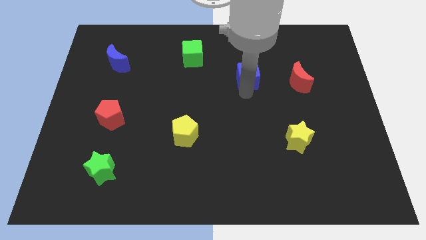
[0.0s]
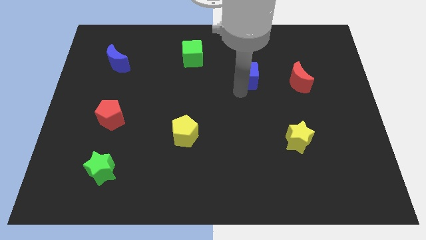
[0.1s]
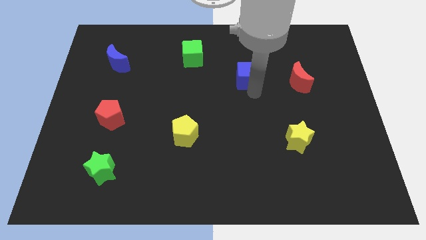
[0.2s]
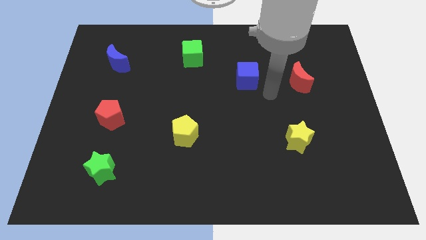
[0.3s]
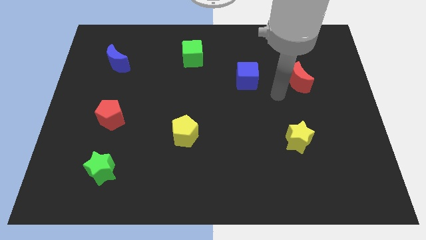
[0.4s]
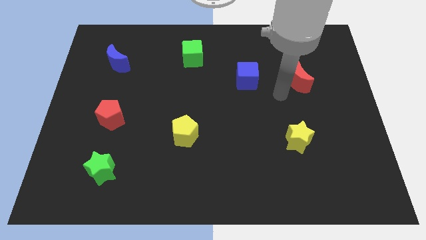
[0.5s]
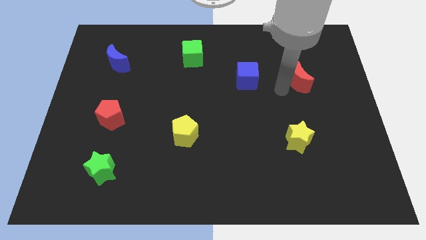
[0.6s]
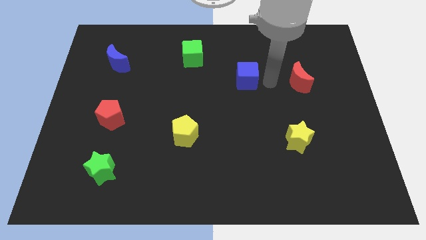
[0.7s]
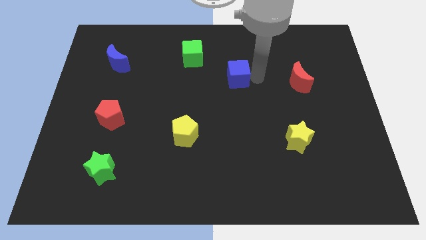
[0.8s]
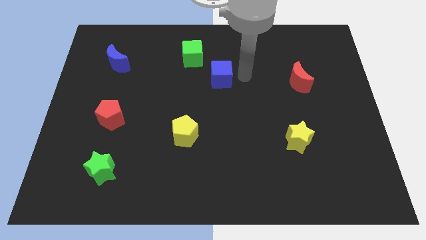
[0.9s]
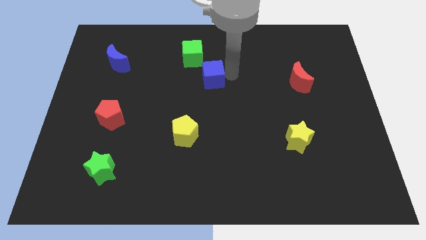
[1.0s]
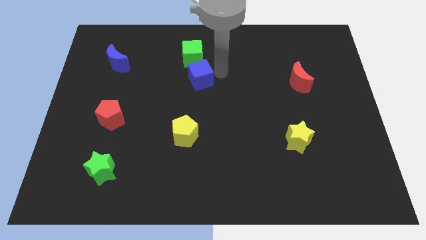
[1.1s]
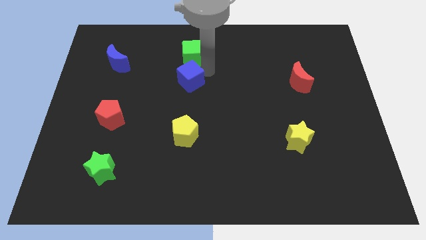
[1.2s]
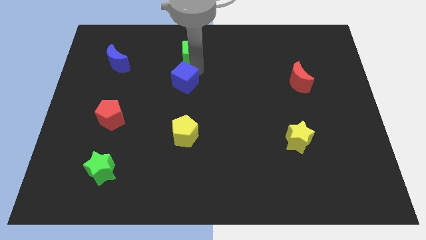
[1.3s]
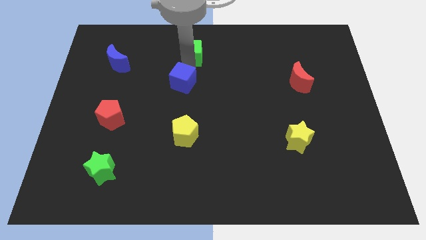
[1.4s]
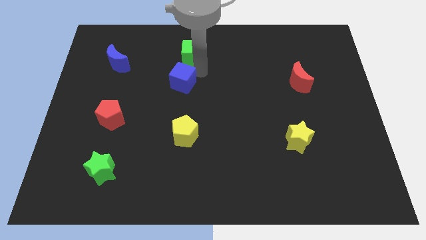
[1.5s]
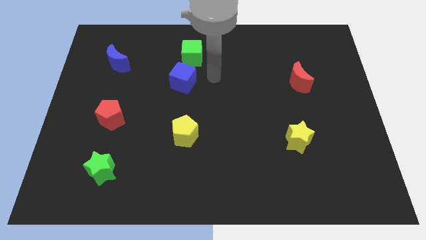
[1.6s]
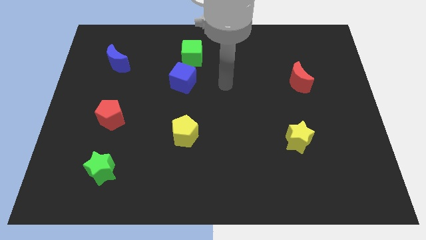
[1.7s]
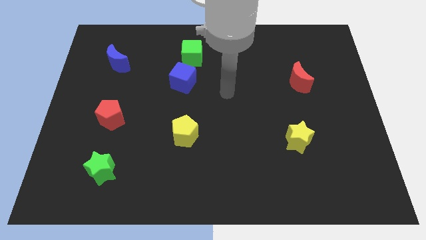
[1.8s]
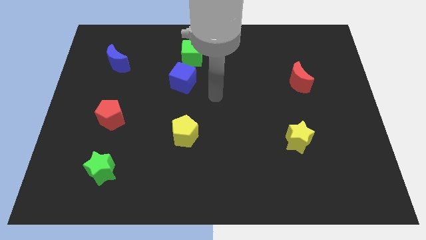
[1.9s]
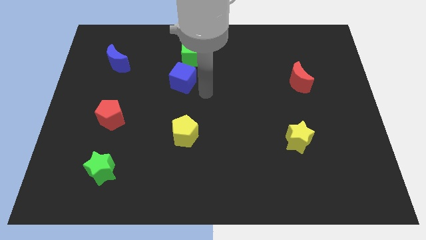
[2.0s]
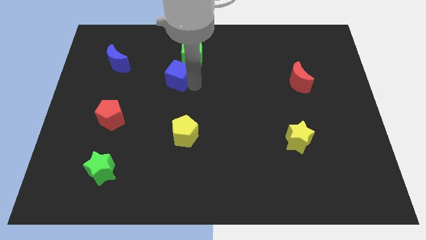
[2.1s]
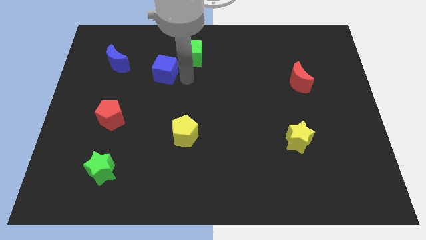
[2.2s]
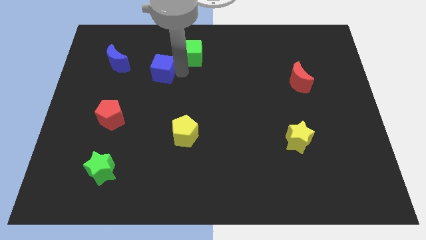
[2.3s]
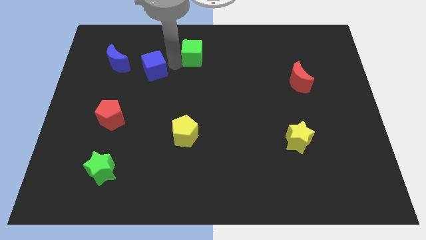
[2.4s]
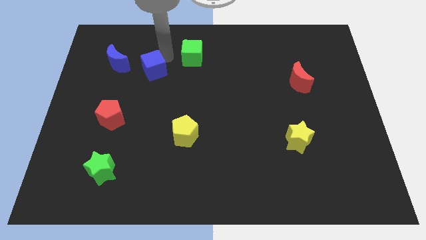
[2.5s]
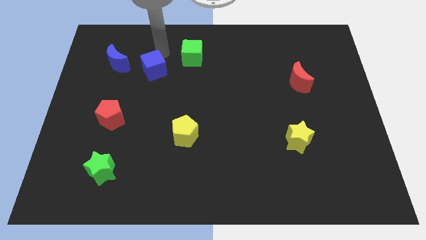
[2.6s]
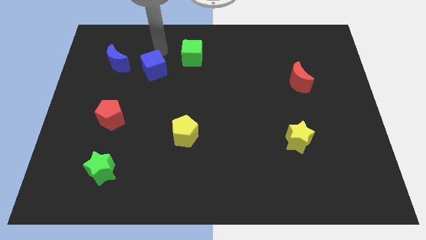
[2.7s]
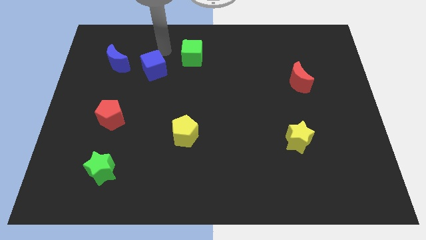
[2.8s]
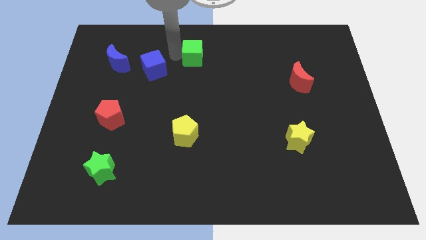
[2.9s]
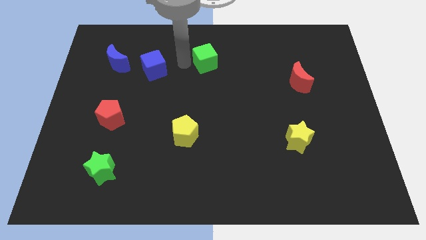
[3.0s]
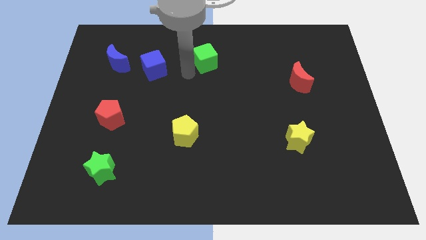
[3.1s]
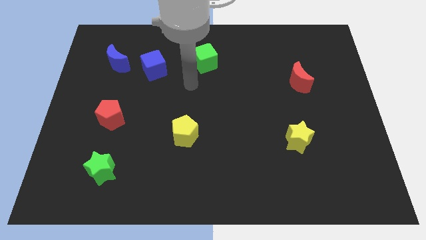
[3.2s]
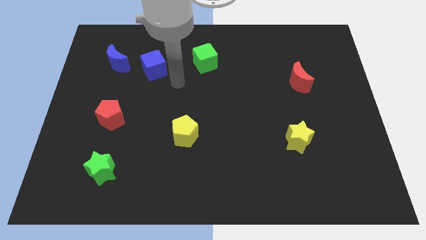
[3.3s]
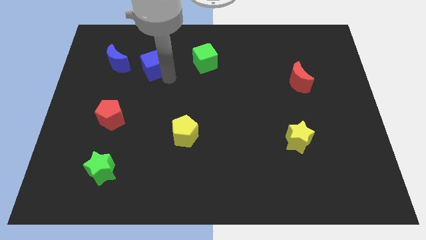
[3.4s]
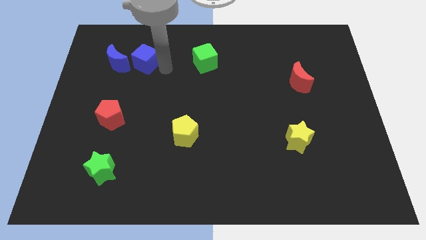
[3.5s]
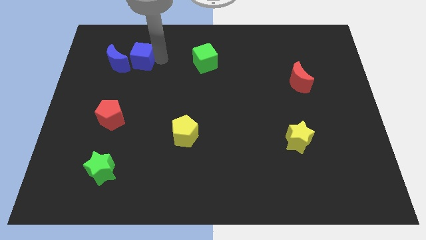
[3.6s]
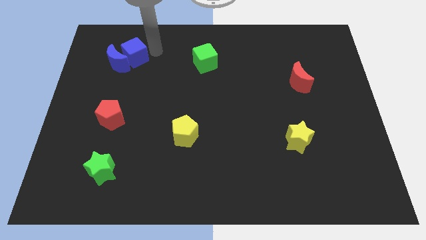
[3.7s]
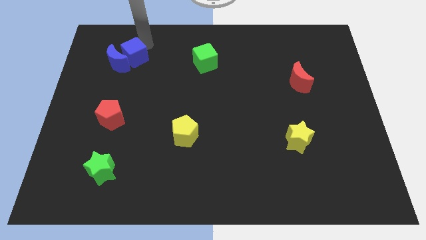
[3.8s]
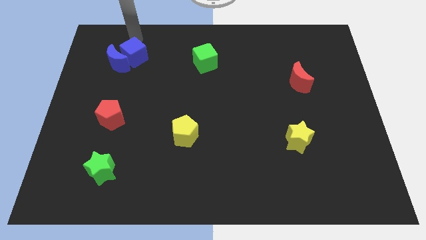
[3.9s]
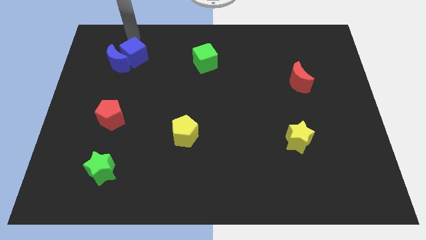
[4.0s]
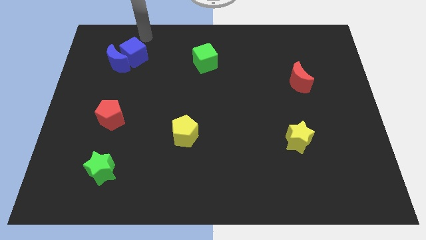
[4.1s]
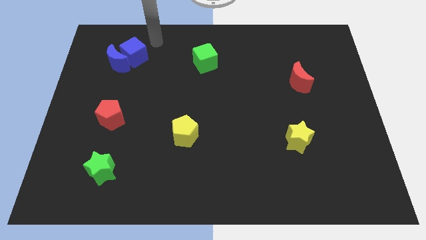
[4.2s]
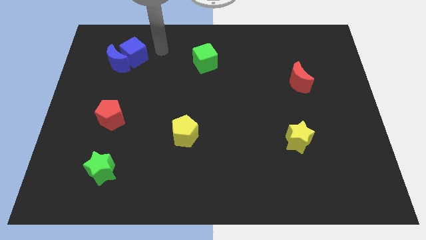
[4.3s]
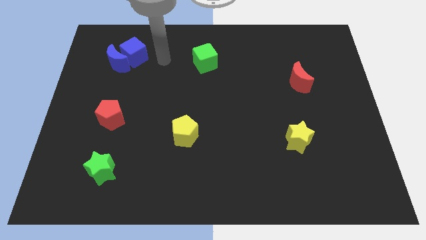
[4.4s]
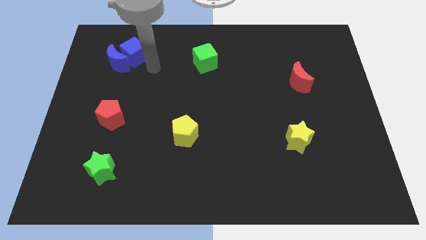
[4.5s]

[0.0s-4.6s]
push the blue cube into blue moon

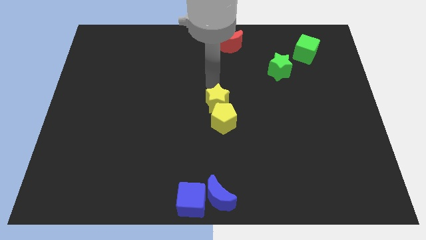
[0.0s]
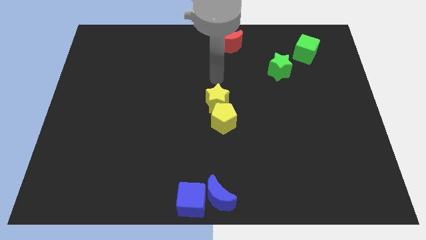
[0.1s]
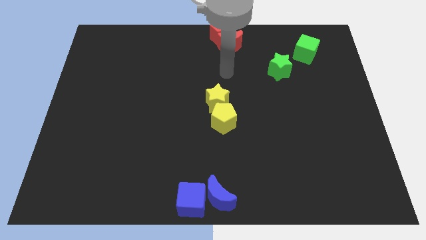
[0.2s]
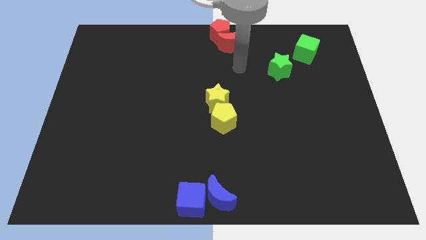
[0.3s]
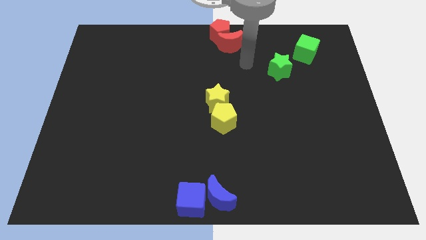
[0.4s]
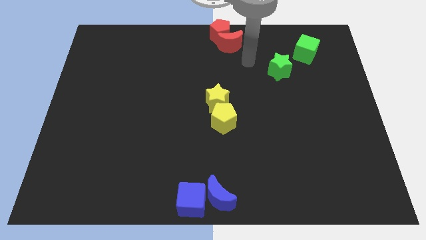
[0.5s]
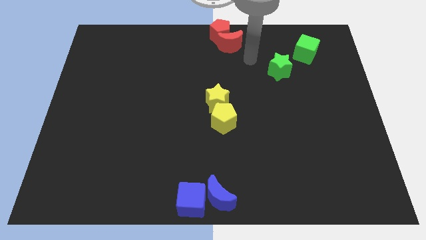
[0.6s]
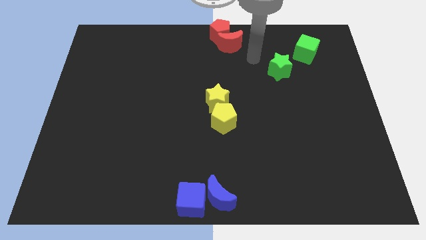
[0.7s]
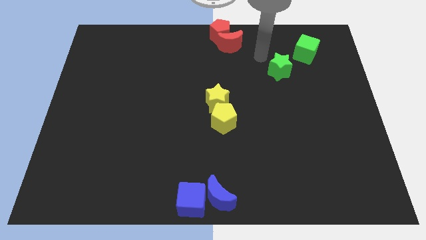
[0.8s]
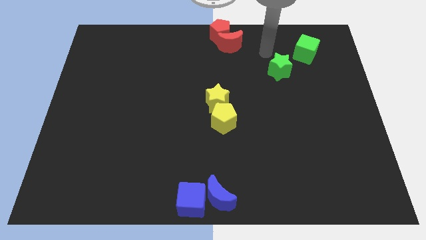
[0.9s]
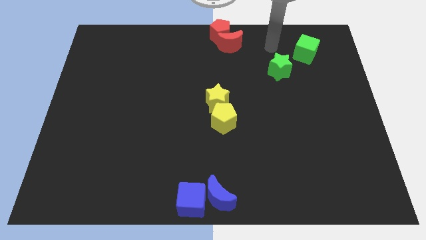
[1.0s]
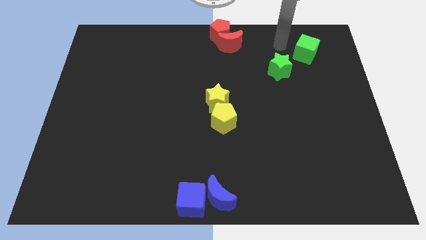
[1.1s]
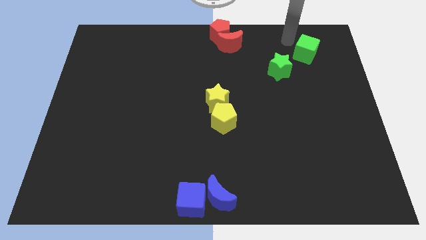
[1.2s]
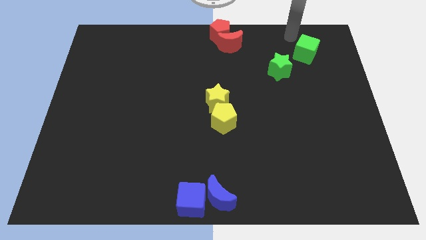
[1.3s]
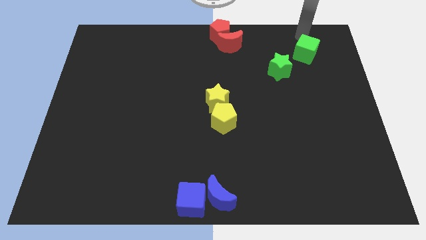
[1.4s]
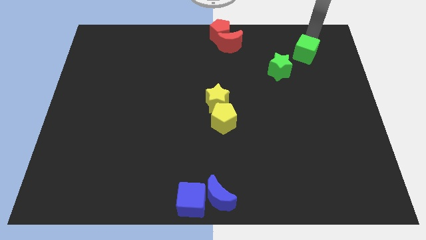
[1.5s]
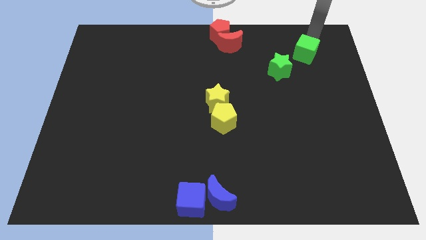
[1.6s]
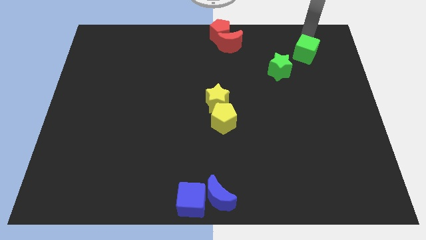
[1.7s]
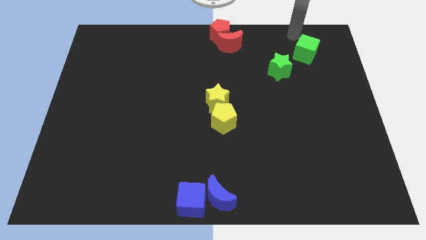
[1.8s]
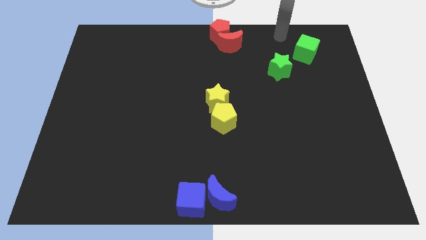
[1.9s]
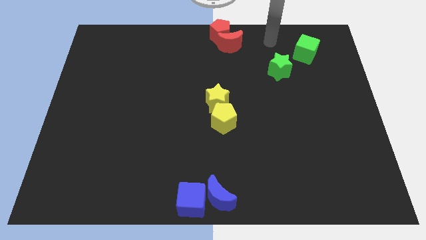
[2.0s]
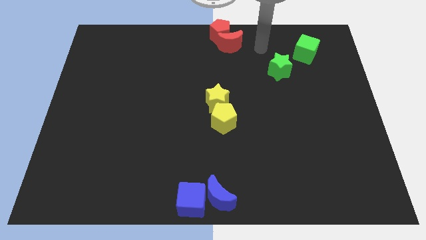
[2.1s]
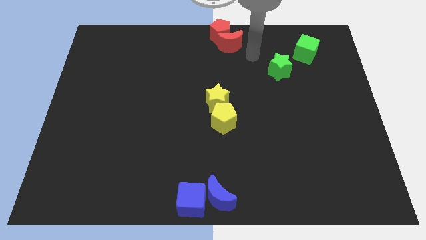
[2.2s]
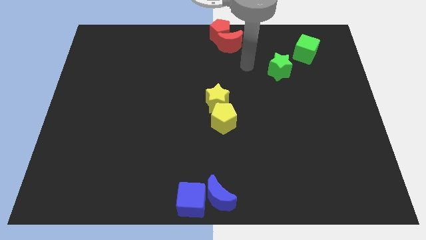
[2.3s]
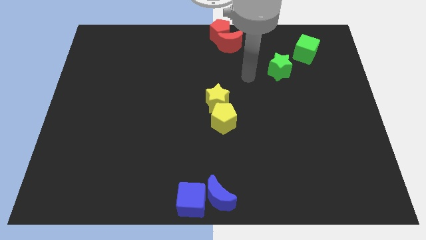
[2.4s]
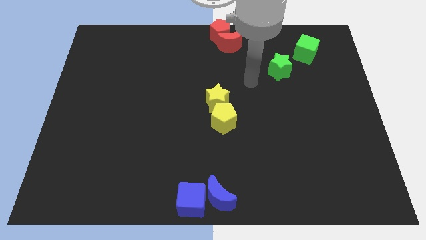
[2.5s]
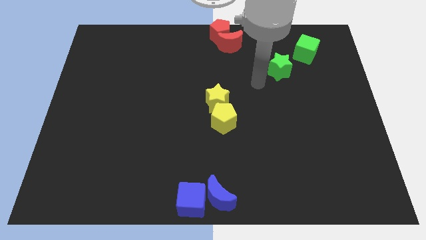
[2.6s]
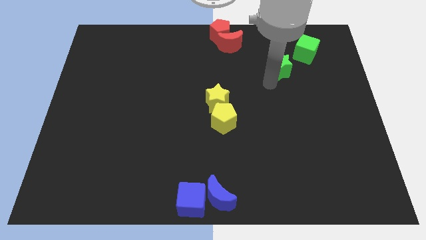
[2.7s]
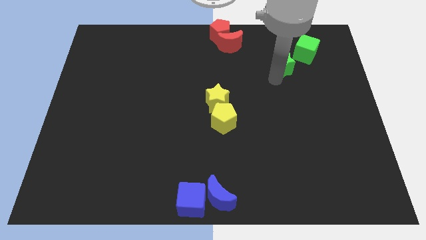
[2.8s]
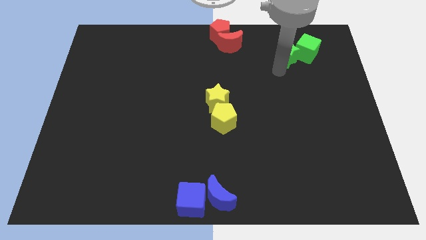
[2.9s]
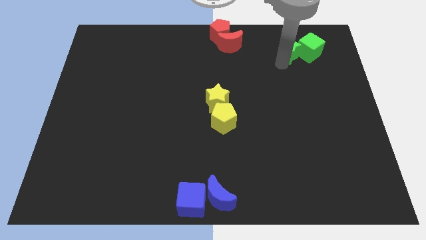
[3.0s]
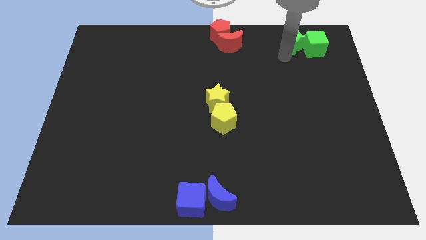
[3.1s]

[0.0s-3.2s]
push the green star into the left side of the green cube

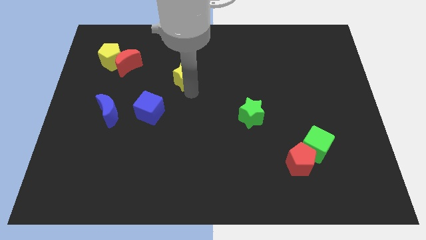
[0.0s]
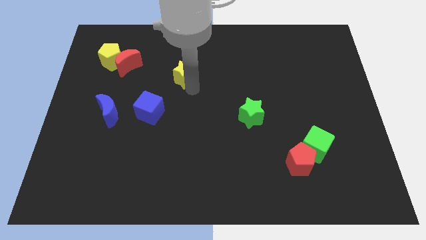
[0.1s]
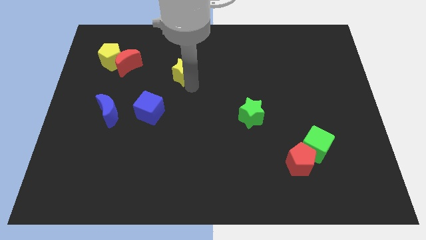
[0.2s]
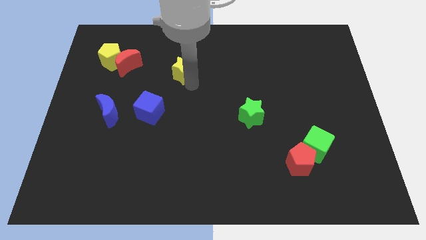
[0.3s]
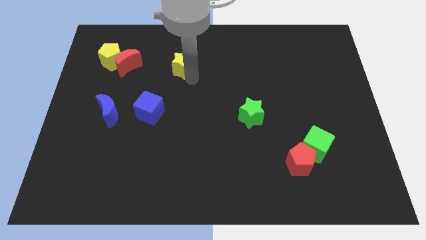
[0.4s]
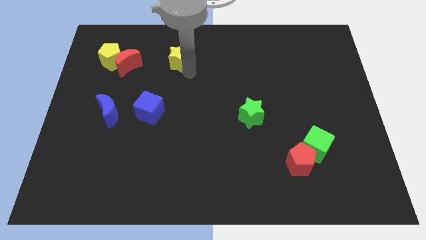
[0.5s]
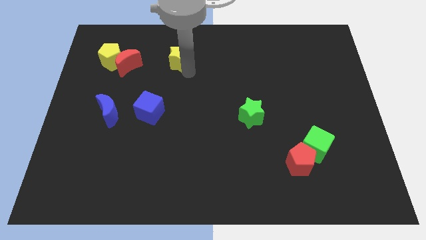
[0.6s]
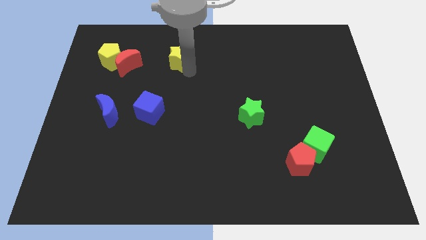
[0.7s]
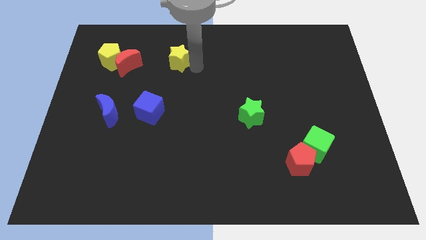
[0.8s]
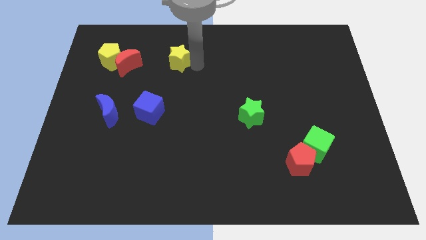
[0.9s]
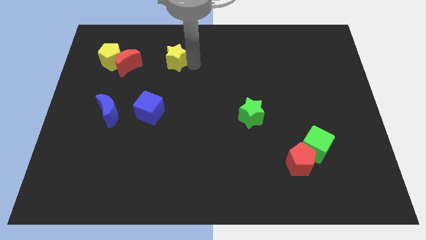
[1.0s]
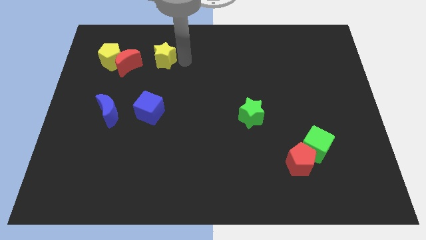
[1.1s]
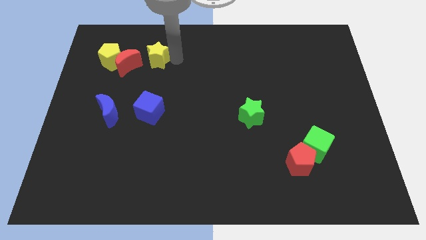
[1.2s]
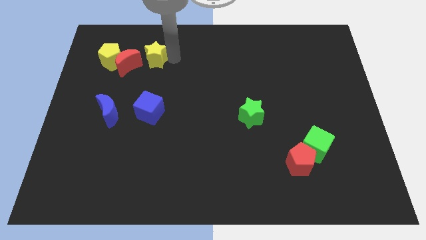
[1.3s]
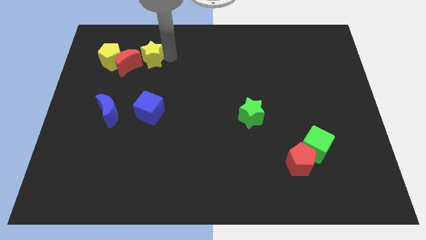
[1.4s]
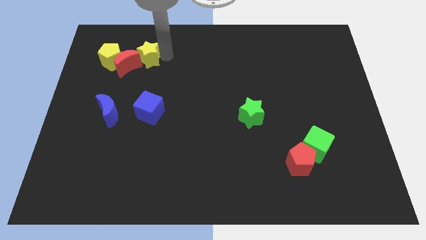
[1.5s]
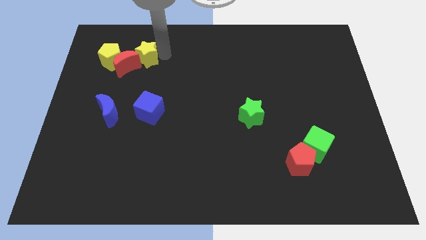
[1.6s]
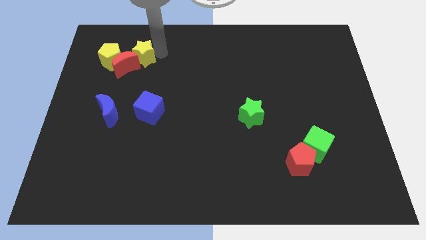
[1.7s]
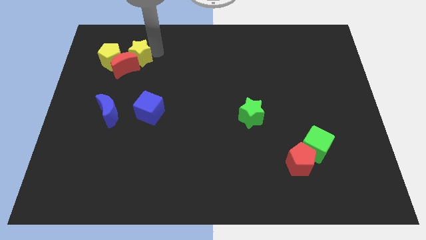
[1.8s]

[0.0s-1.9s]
push the yellow star into the red moon
